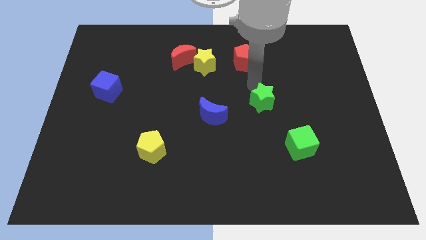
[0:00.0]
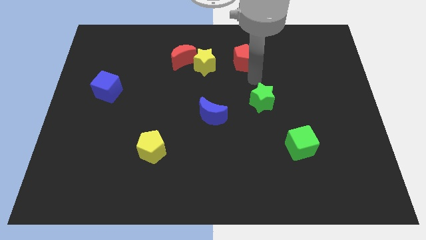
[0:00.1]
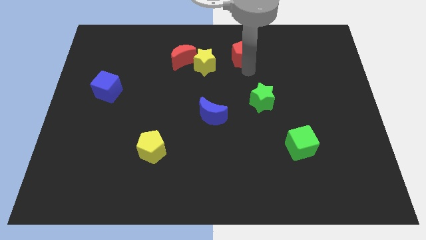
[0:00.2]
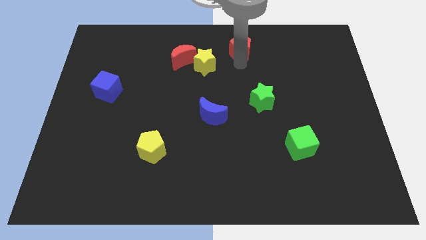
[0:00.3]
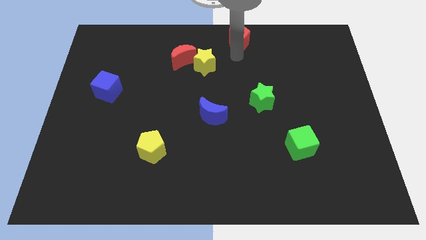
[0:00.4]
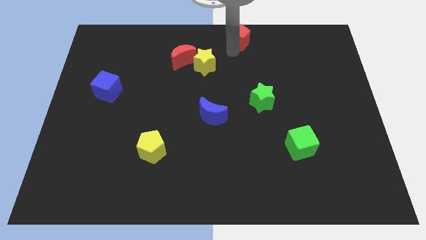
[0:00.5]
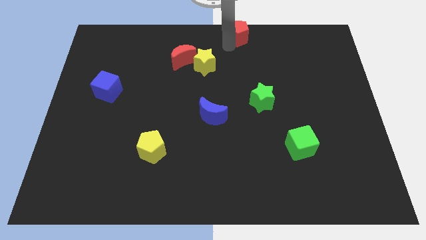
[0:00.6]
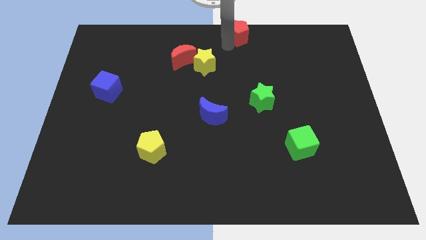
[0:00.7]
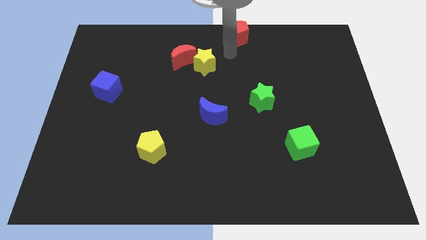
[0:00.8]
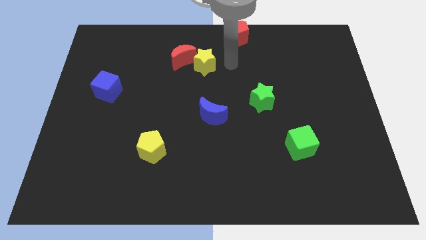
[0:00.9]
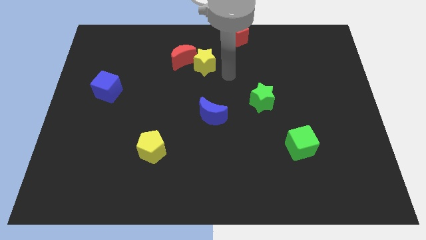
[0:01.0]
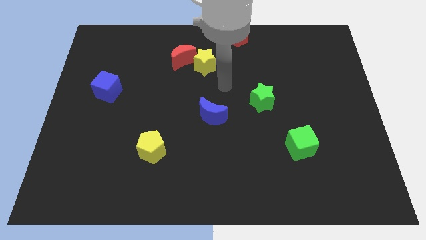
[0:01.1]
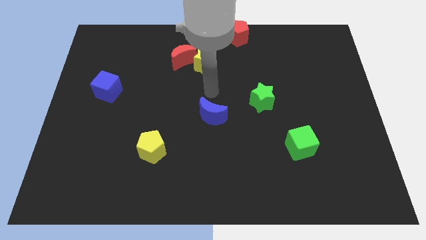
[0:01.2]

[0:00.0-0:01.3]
move the red pentagon to the top centre of the board

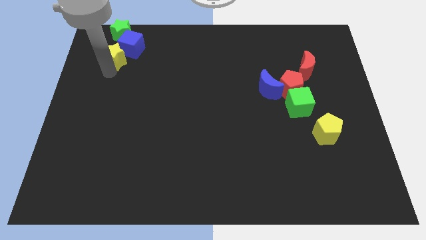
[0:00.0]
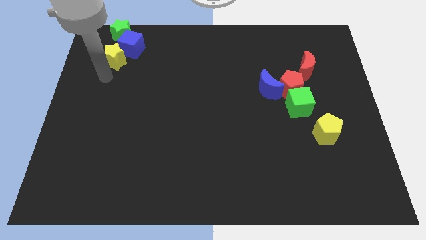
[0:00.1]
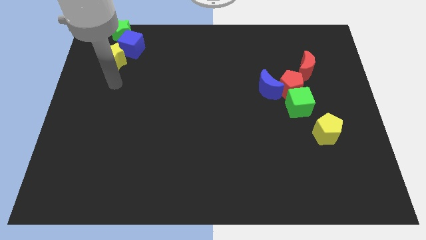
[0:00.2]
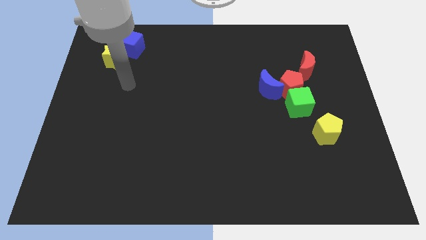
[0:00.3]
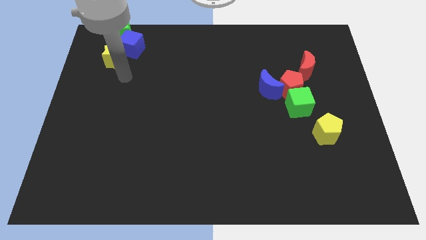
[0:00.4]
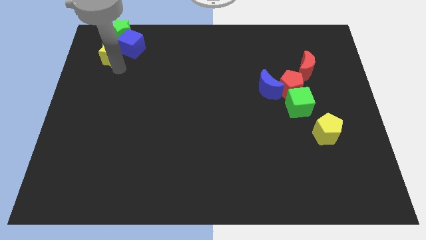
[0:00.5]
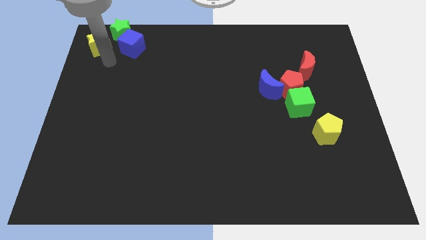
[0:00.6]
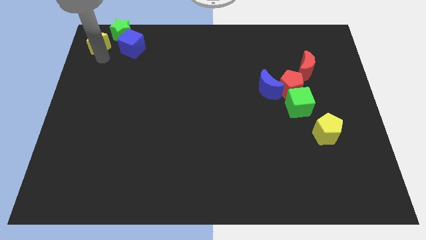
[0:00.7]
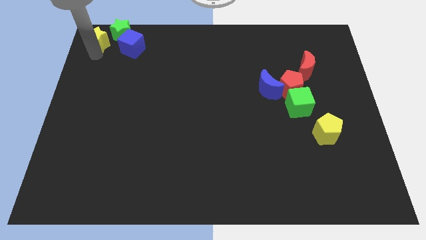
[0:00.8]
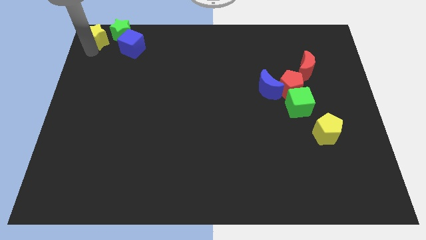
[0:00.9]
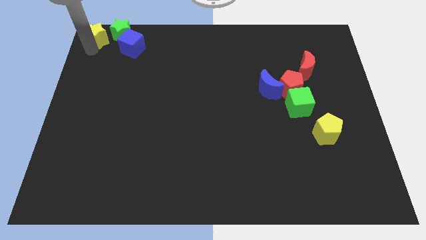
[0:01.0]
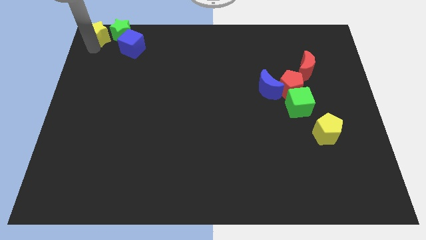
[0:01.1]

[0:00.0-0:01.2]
place yellow star to the left of the green star

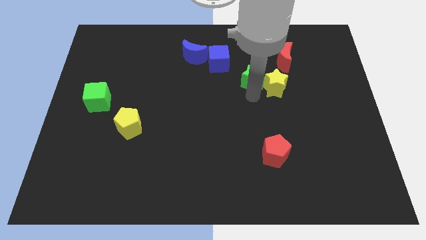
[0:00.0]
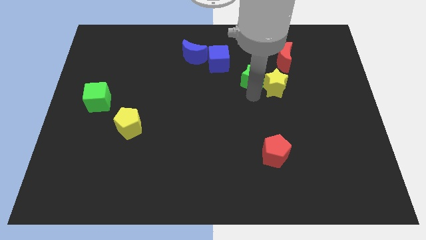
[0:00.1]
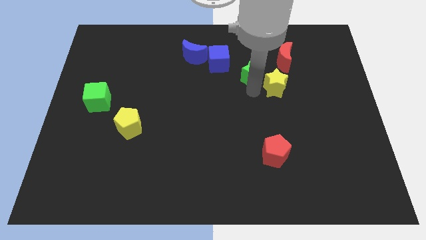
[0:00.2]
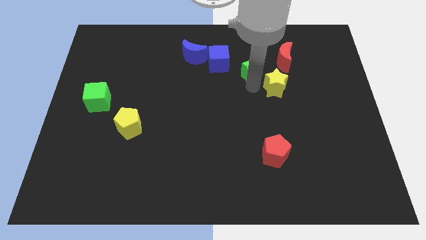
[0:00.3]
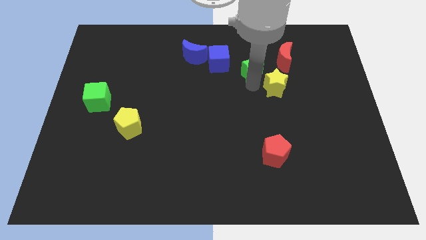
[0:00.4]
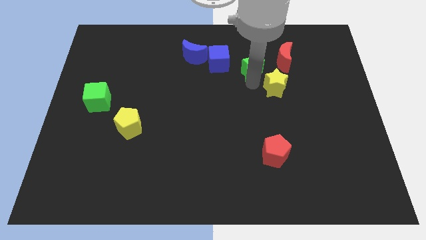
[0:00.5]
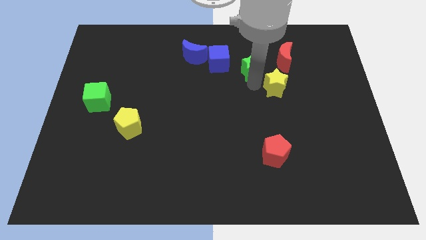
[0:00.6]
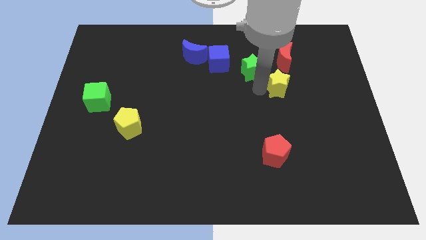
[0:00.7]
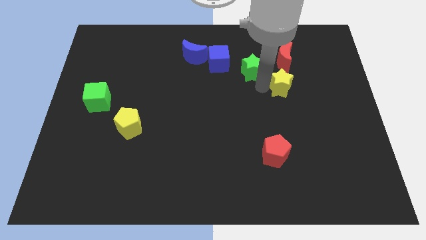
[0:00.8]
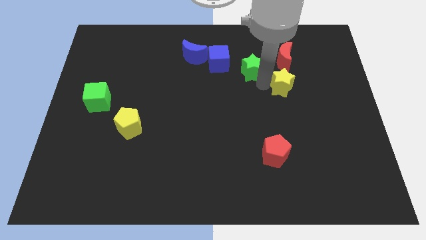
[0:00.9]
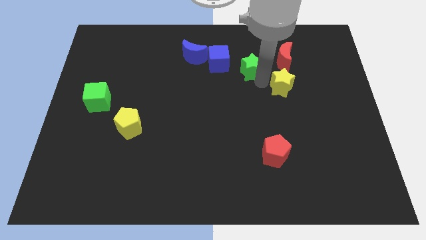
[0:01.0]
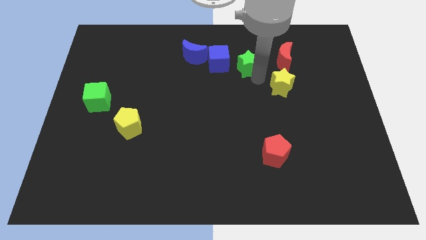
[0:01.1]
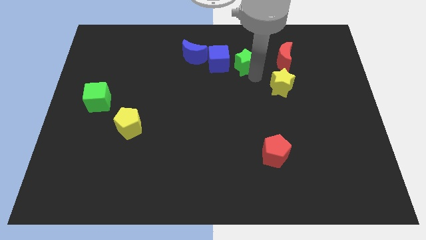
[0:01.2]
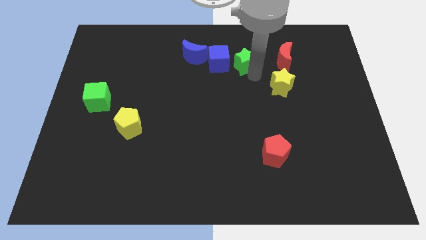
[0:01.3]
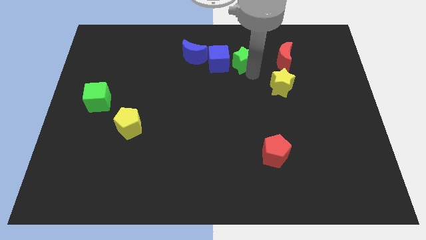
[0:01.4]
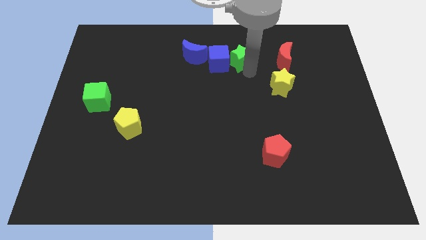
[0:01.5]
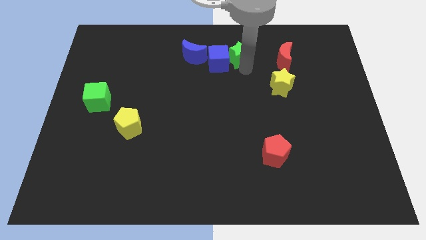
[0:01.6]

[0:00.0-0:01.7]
place the green star to the right of the blue cube

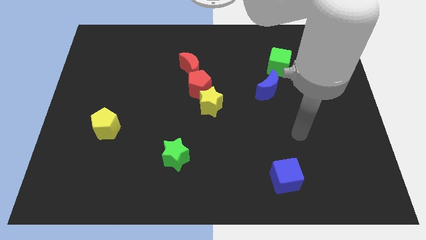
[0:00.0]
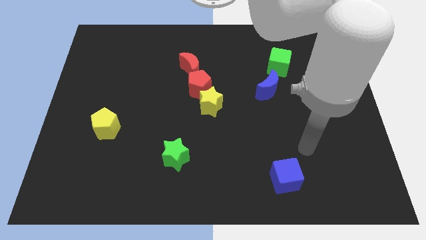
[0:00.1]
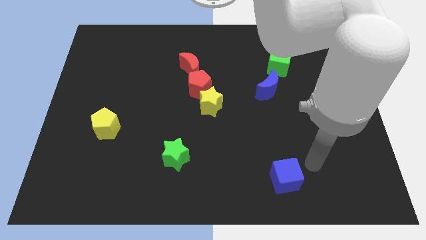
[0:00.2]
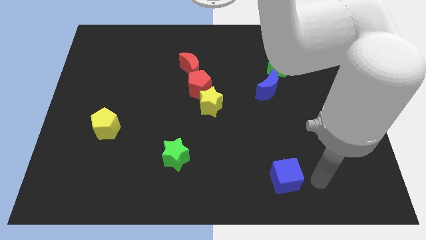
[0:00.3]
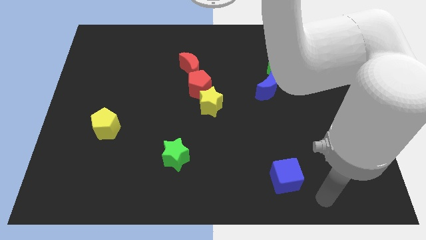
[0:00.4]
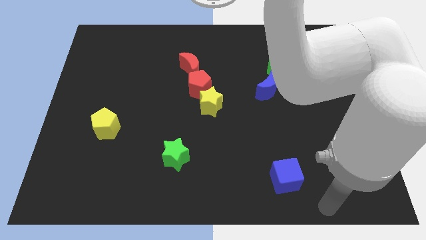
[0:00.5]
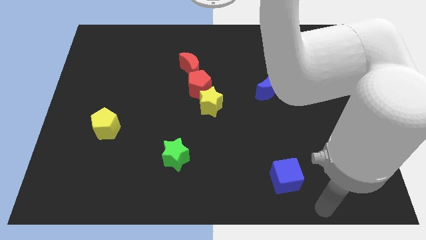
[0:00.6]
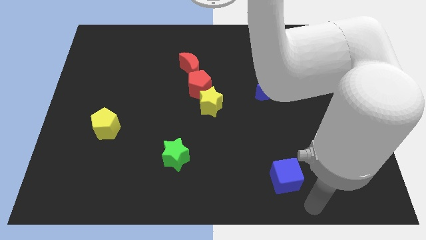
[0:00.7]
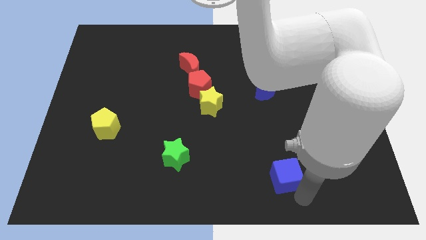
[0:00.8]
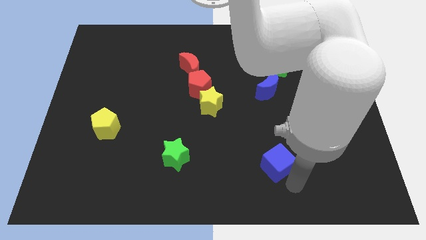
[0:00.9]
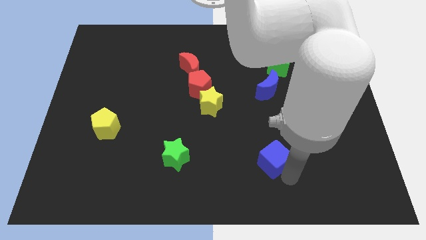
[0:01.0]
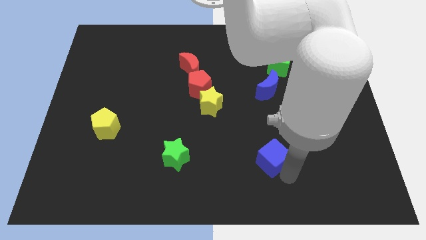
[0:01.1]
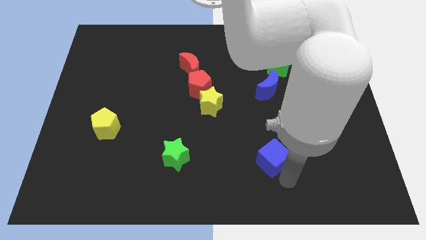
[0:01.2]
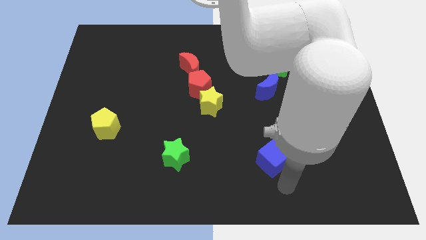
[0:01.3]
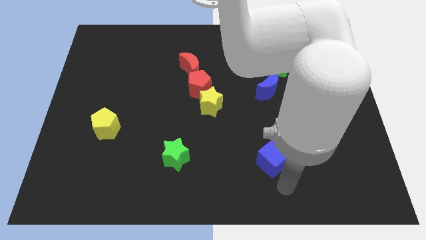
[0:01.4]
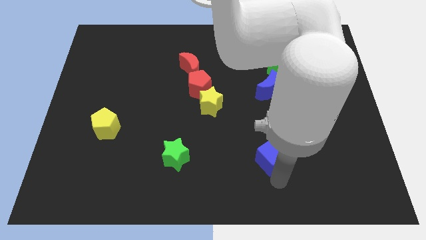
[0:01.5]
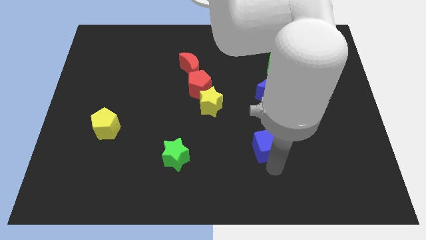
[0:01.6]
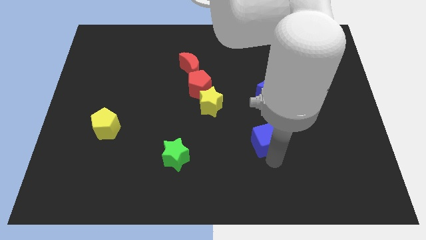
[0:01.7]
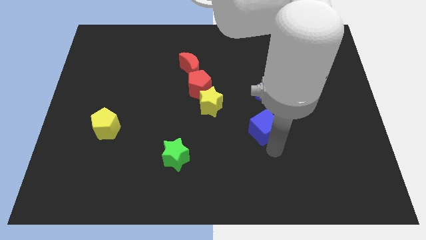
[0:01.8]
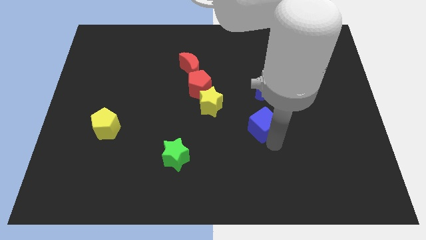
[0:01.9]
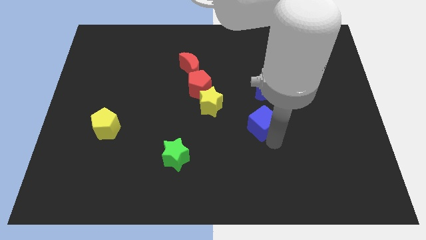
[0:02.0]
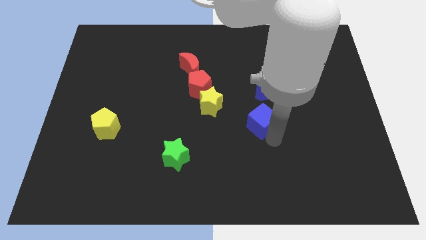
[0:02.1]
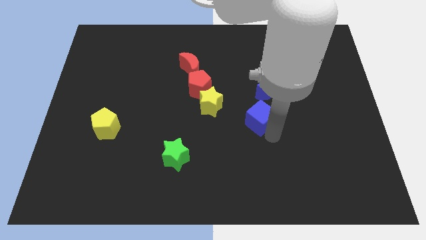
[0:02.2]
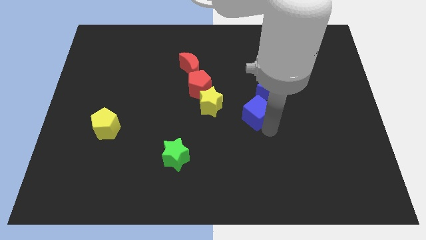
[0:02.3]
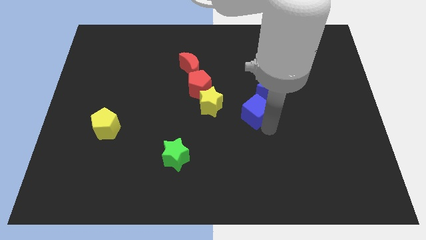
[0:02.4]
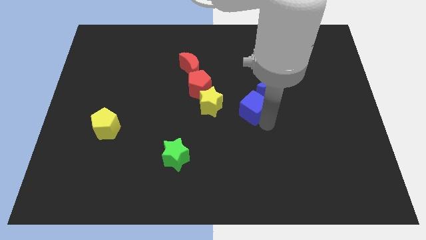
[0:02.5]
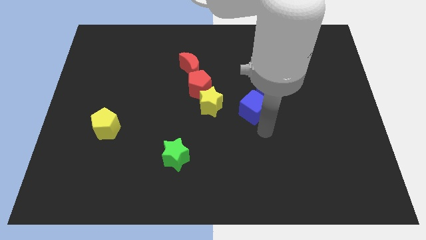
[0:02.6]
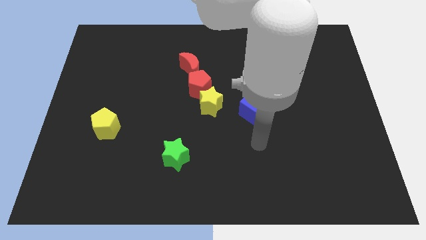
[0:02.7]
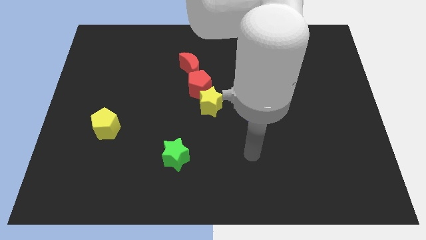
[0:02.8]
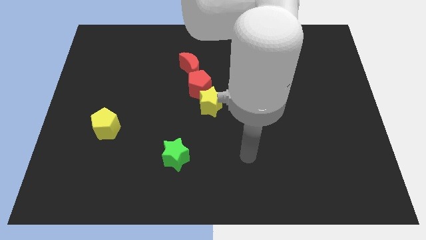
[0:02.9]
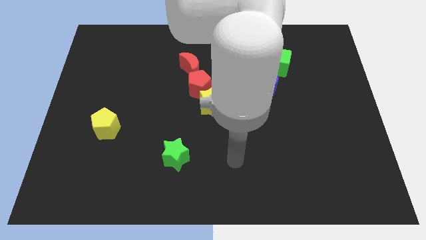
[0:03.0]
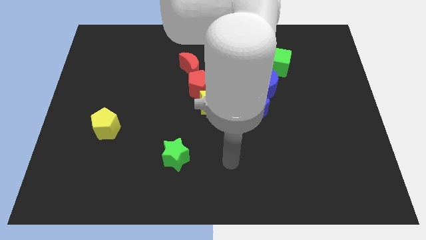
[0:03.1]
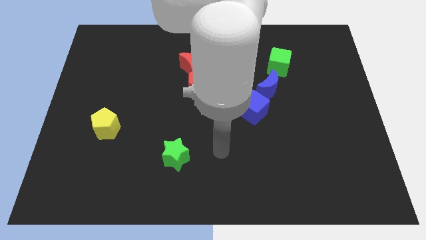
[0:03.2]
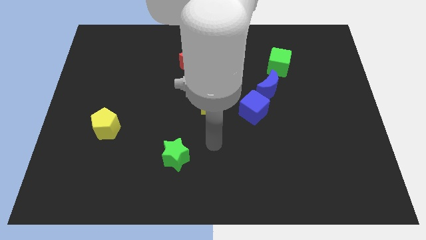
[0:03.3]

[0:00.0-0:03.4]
move blue cube towards blue crescent

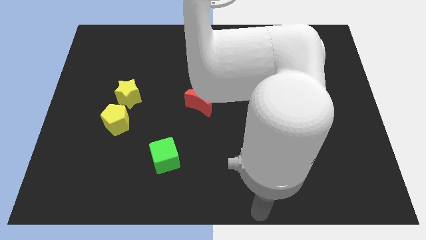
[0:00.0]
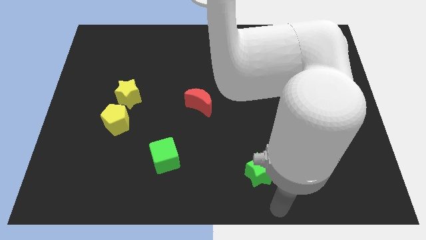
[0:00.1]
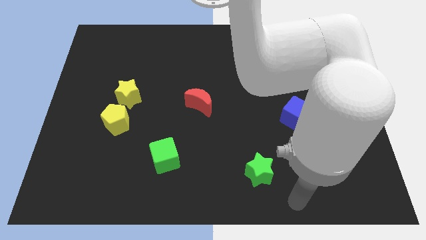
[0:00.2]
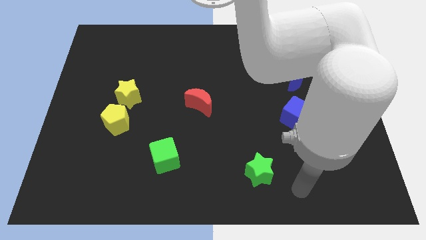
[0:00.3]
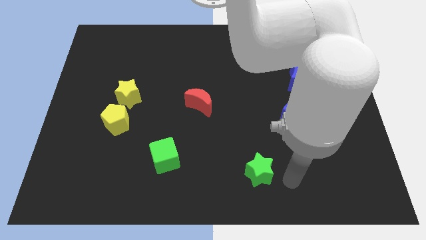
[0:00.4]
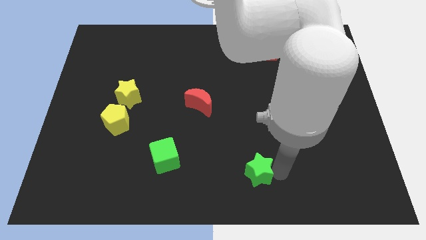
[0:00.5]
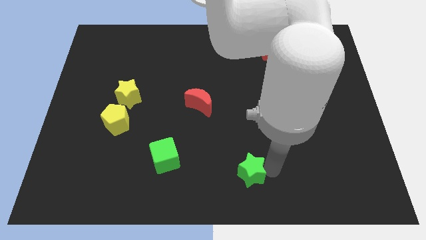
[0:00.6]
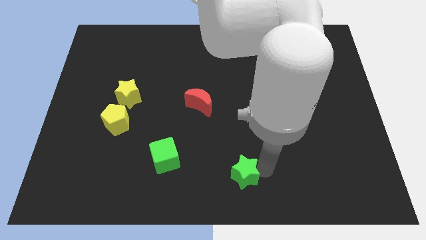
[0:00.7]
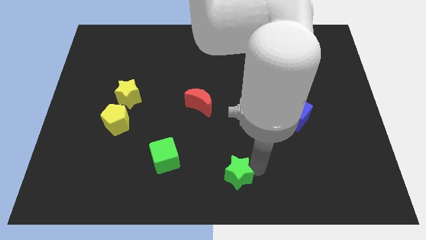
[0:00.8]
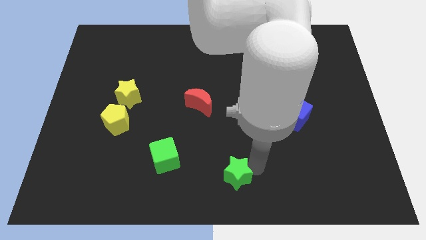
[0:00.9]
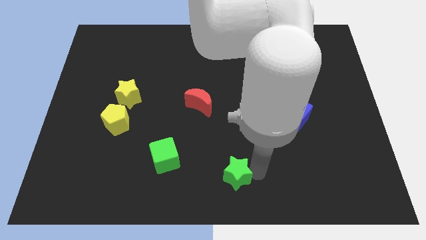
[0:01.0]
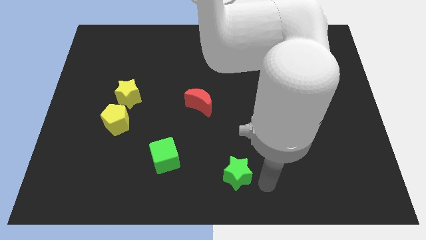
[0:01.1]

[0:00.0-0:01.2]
push the green star to the left of the board

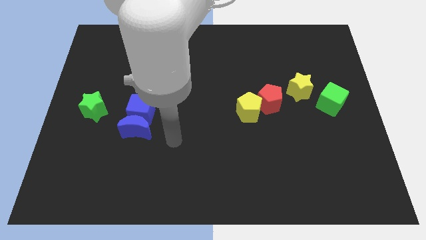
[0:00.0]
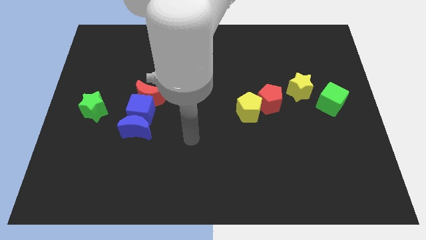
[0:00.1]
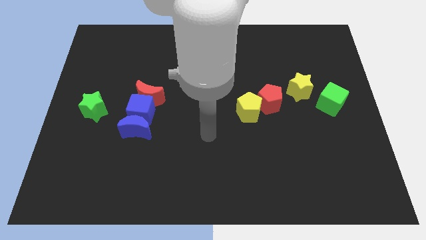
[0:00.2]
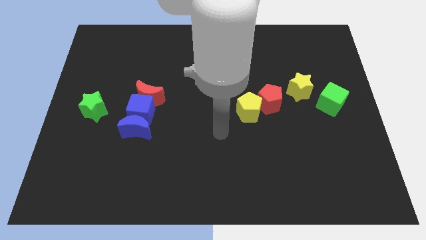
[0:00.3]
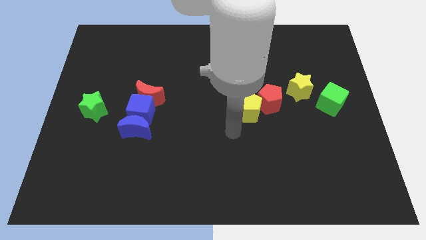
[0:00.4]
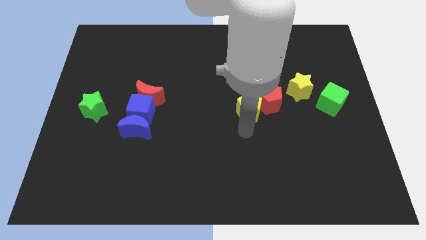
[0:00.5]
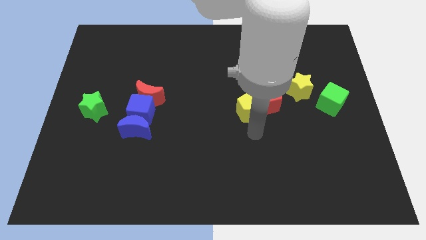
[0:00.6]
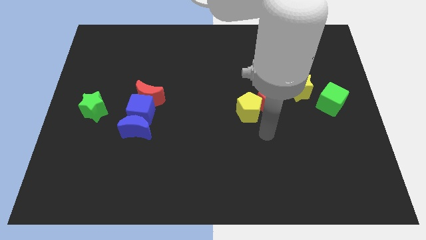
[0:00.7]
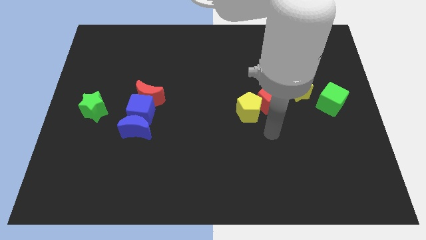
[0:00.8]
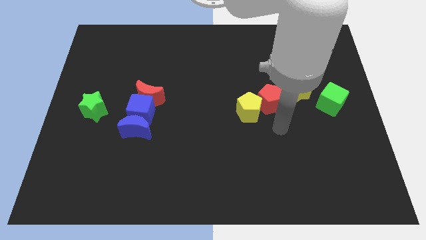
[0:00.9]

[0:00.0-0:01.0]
move your arm below the red pentagon
